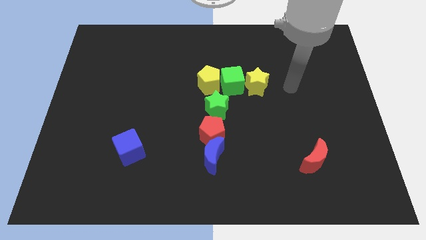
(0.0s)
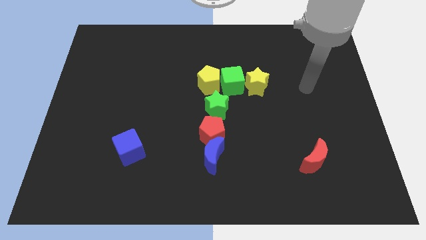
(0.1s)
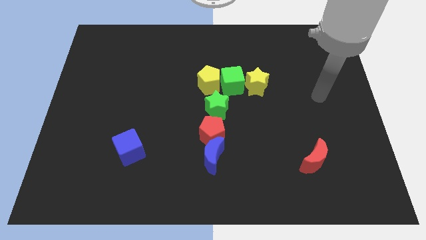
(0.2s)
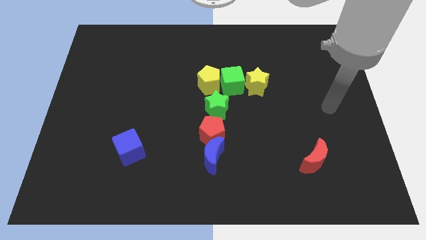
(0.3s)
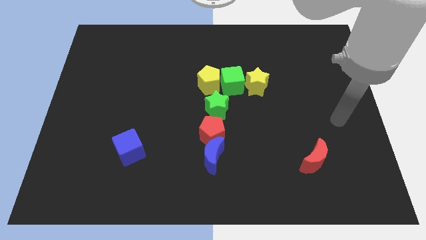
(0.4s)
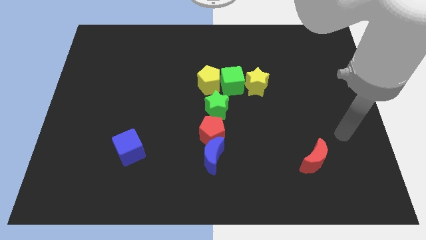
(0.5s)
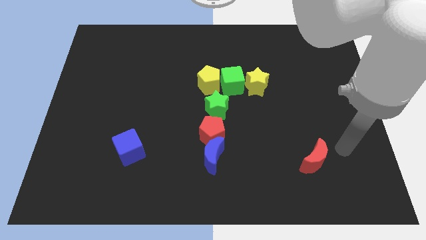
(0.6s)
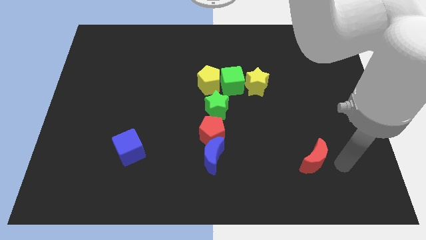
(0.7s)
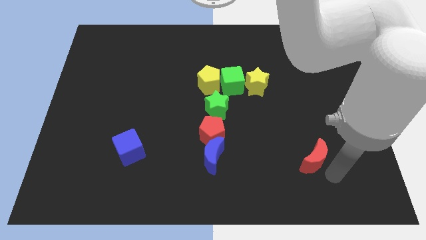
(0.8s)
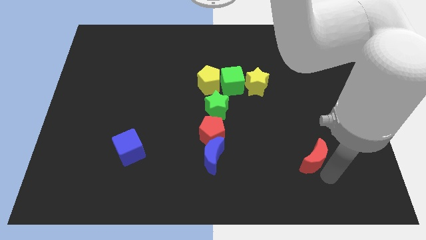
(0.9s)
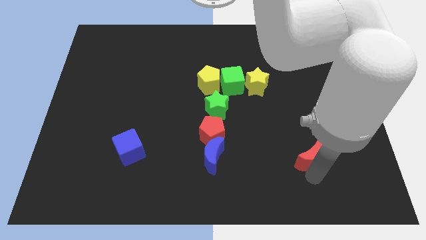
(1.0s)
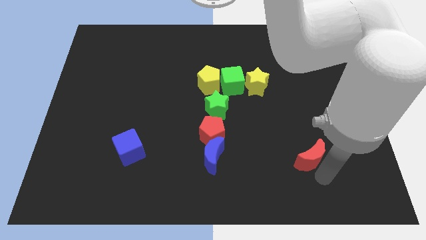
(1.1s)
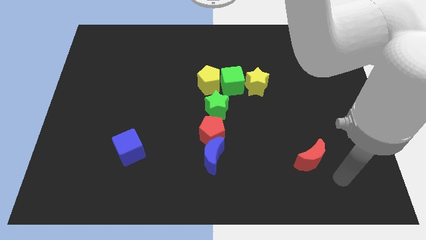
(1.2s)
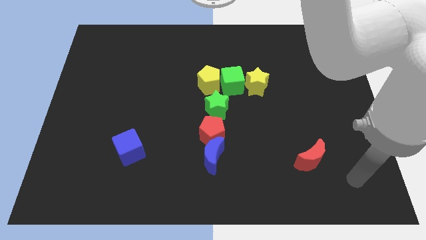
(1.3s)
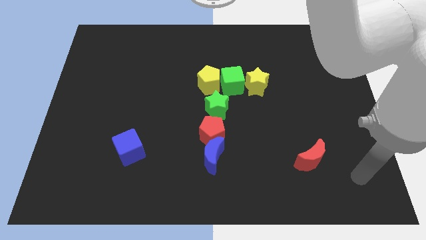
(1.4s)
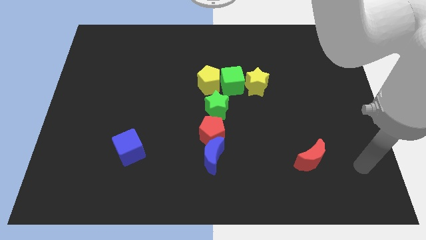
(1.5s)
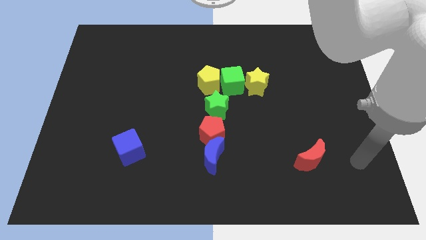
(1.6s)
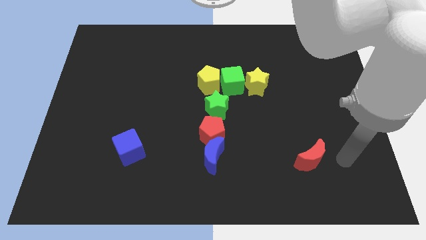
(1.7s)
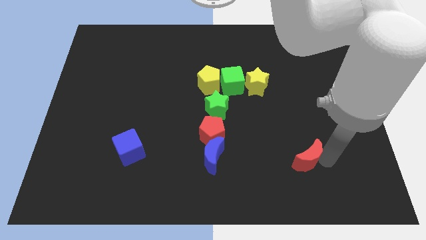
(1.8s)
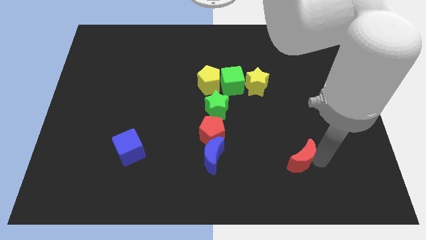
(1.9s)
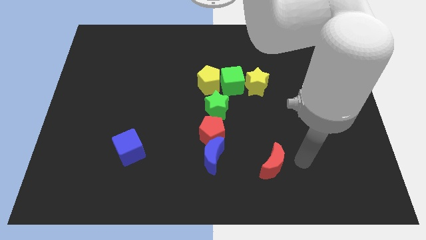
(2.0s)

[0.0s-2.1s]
push the red moon towards the blue moon

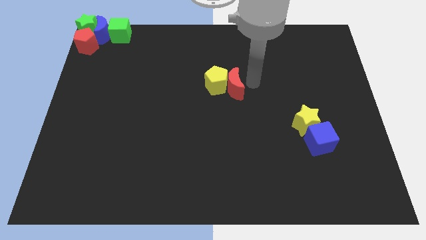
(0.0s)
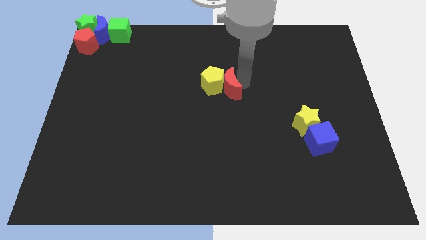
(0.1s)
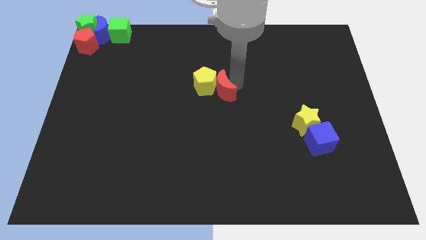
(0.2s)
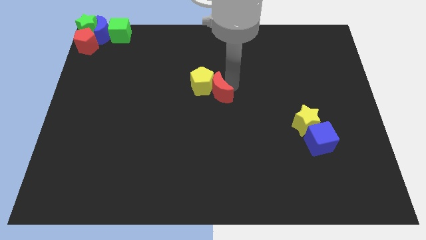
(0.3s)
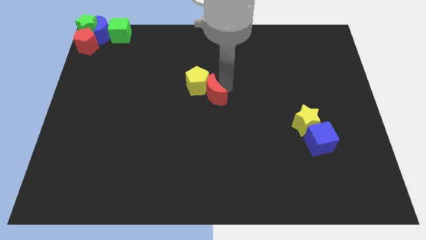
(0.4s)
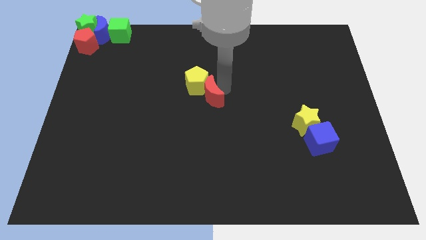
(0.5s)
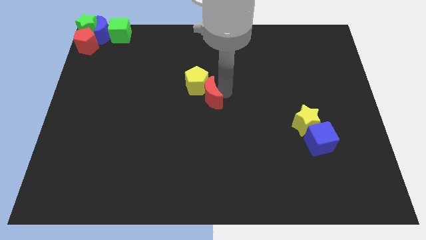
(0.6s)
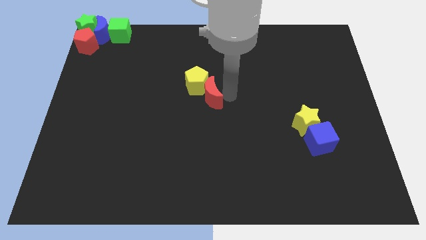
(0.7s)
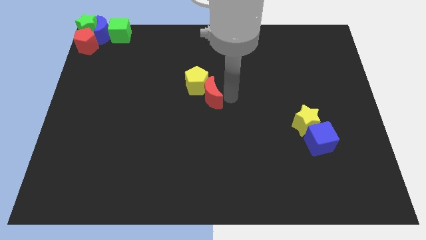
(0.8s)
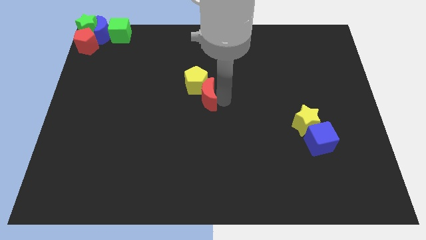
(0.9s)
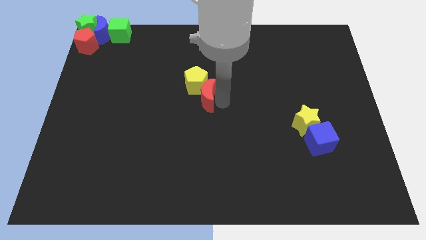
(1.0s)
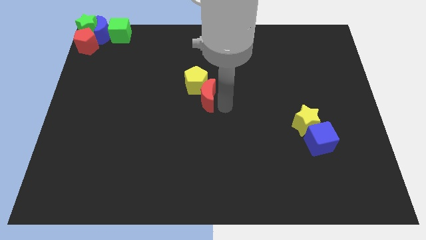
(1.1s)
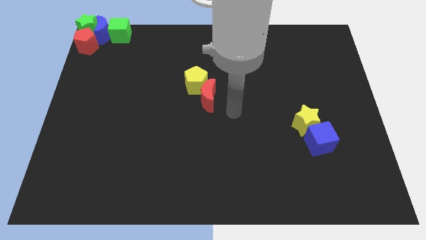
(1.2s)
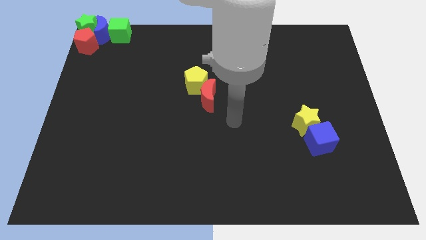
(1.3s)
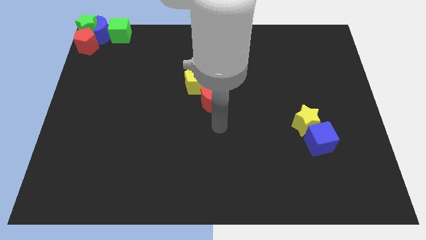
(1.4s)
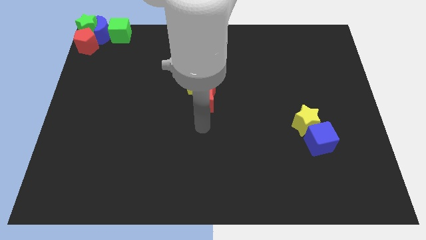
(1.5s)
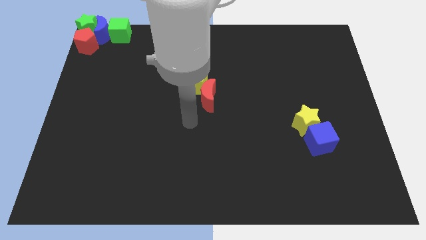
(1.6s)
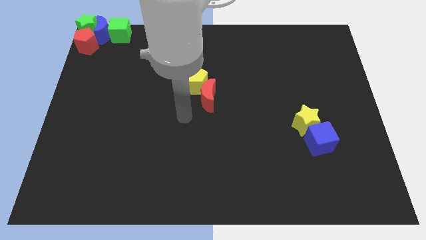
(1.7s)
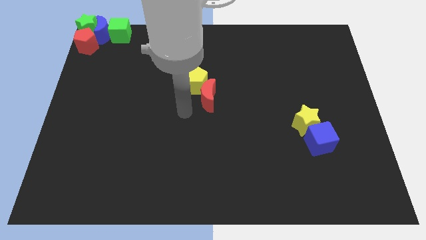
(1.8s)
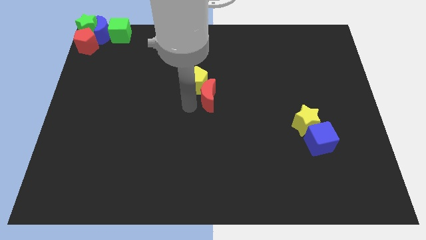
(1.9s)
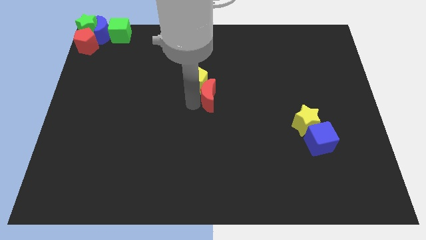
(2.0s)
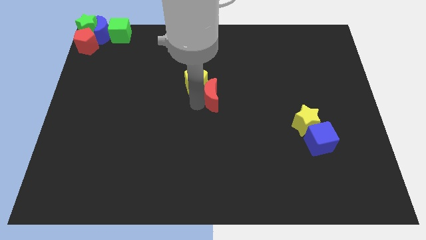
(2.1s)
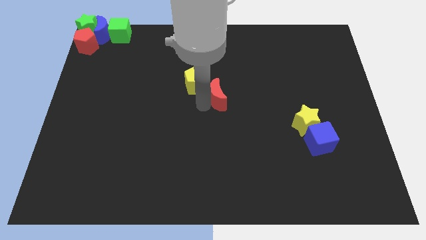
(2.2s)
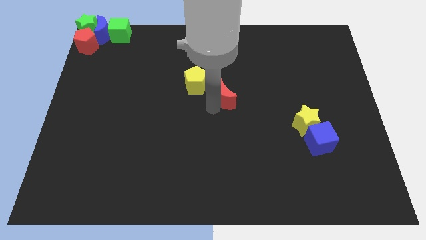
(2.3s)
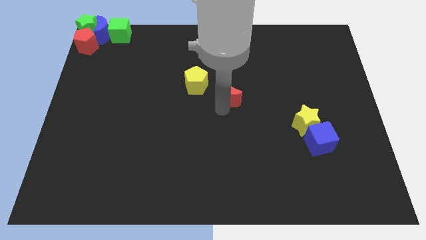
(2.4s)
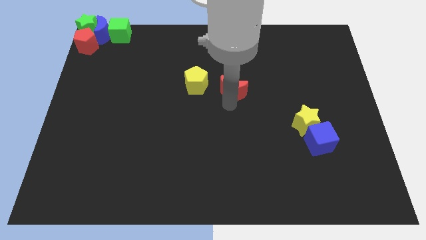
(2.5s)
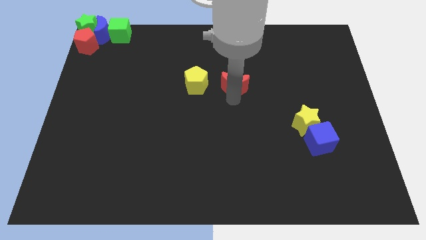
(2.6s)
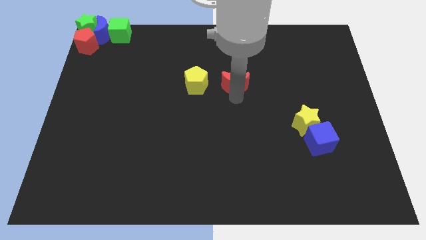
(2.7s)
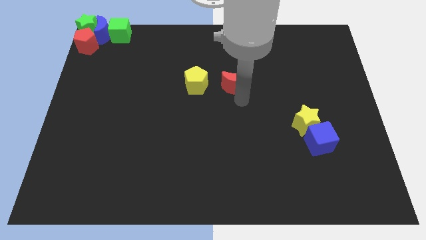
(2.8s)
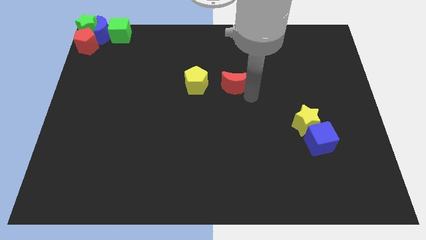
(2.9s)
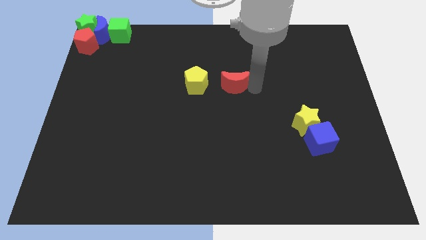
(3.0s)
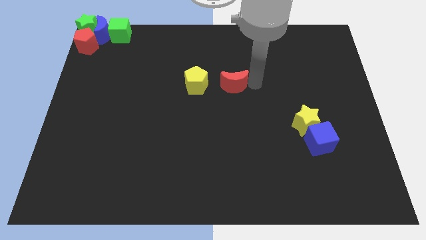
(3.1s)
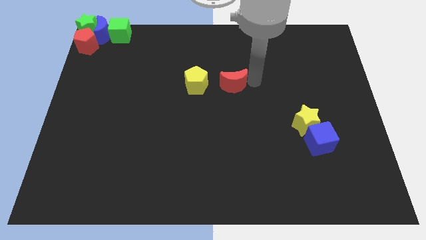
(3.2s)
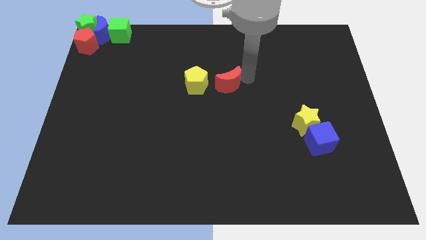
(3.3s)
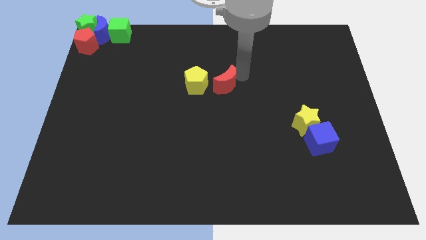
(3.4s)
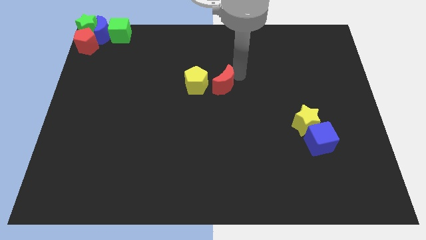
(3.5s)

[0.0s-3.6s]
separate the red moon from the yellow pentagon

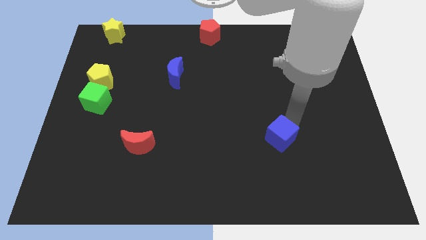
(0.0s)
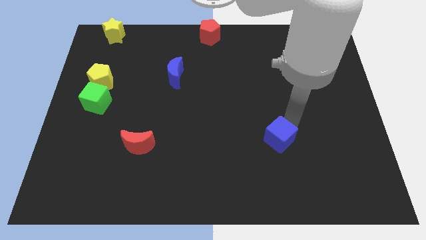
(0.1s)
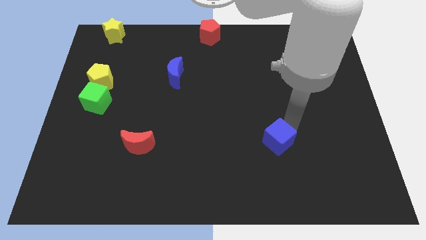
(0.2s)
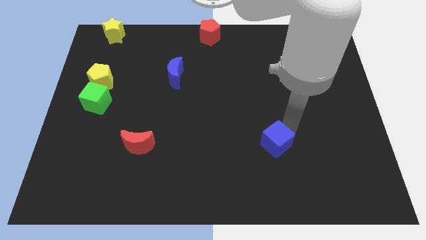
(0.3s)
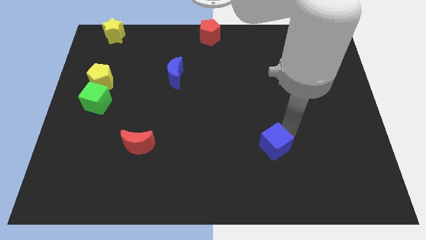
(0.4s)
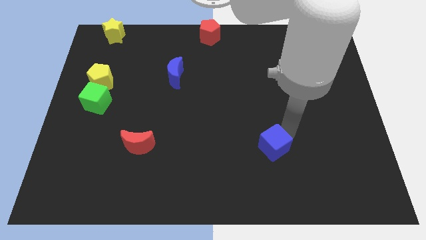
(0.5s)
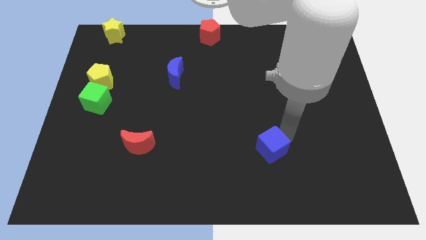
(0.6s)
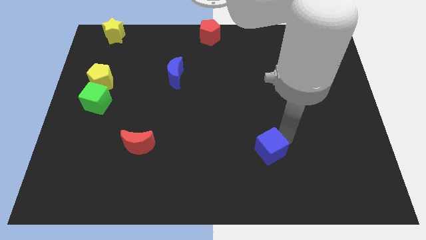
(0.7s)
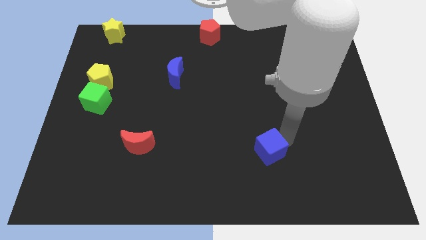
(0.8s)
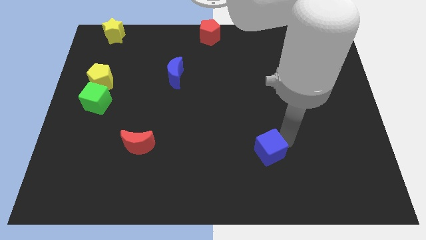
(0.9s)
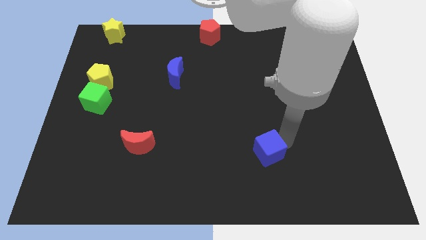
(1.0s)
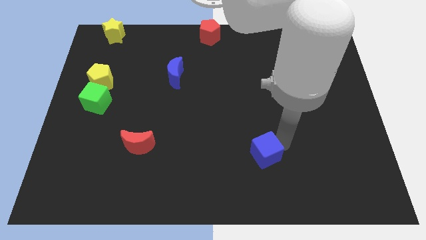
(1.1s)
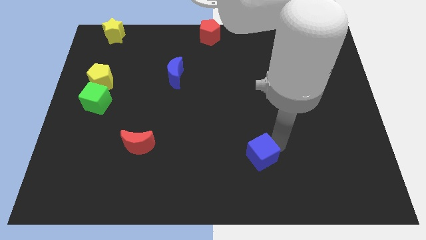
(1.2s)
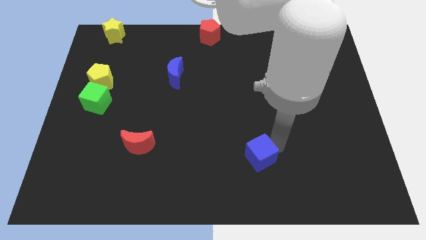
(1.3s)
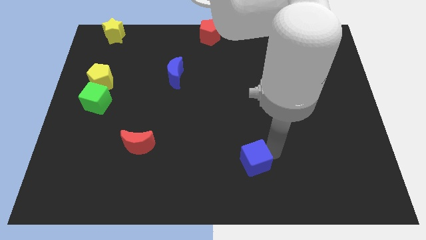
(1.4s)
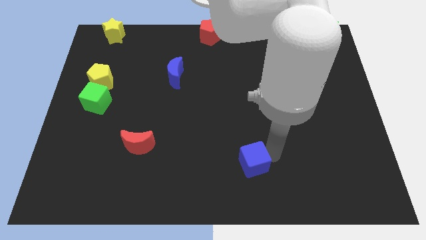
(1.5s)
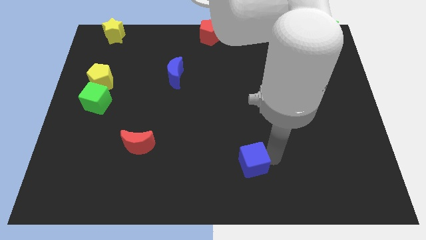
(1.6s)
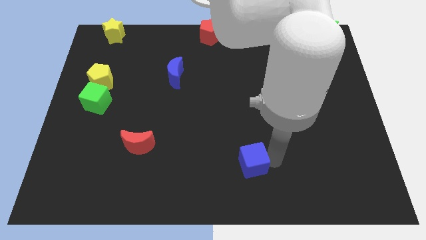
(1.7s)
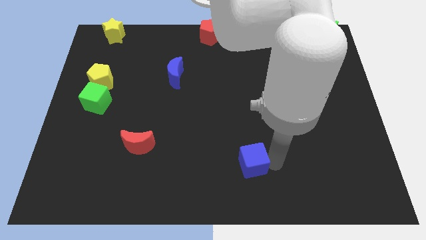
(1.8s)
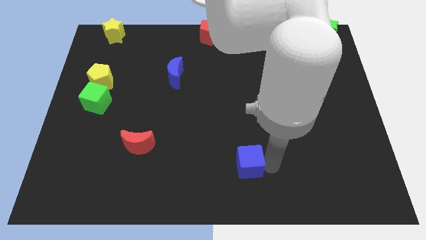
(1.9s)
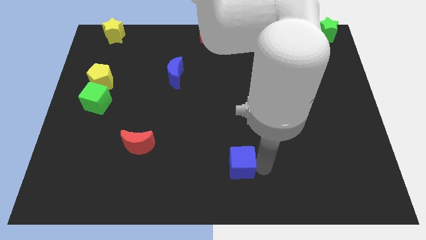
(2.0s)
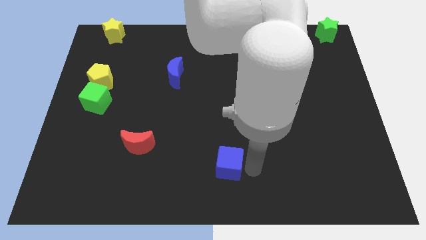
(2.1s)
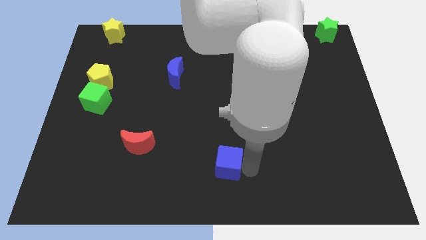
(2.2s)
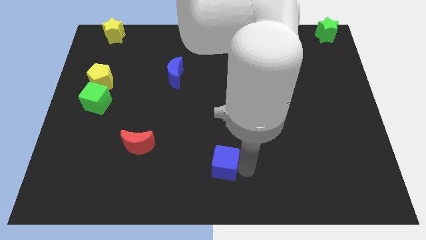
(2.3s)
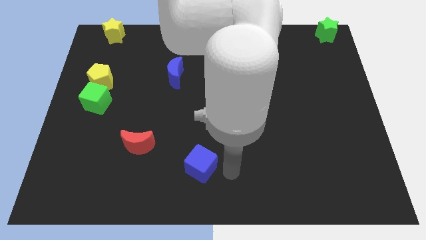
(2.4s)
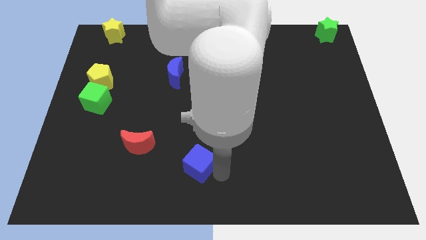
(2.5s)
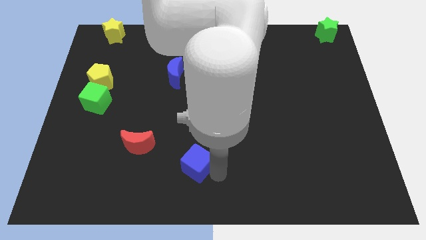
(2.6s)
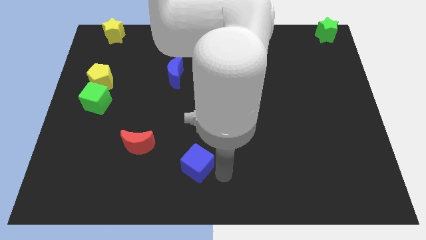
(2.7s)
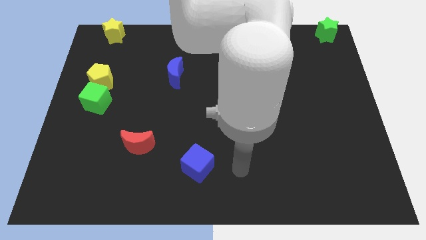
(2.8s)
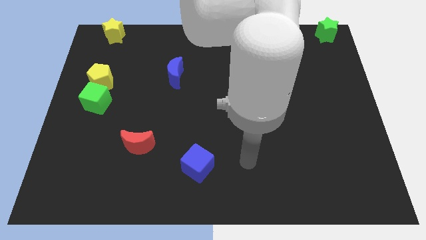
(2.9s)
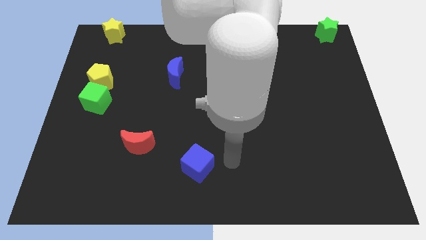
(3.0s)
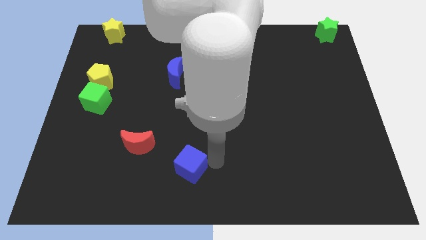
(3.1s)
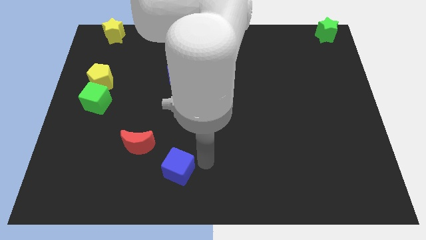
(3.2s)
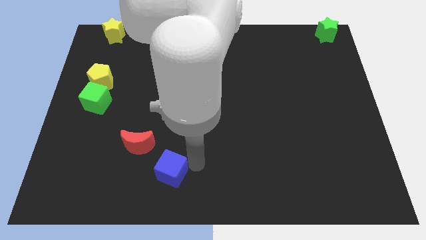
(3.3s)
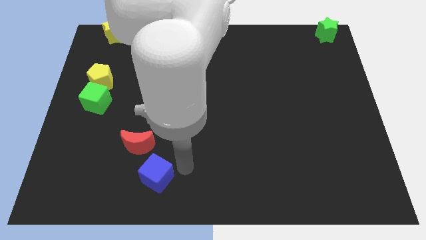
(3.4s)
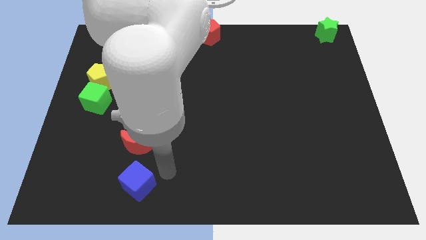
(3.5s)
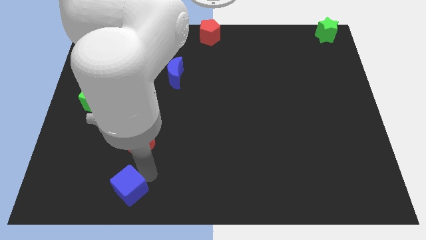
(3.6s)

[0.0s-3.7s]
place the blue cube vertically below the red crescent
